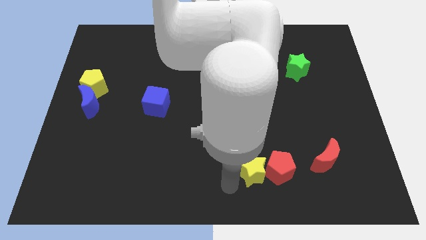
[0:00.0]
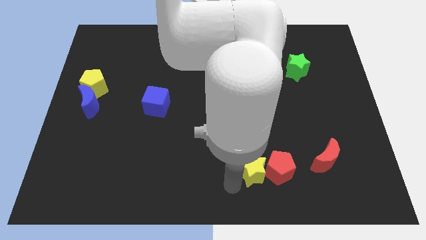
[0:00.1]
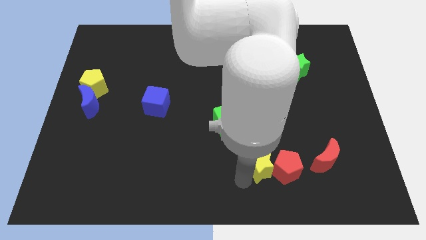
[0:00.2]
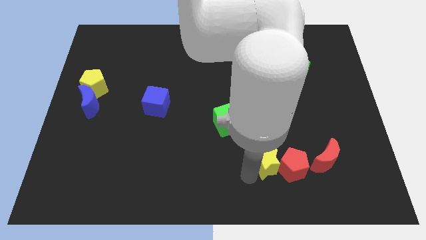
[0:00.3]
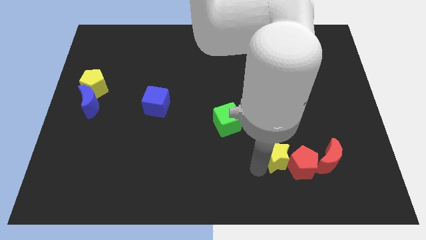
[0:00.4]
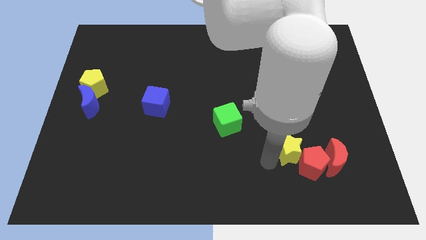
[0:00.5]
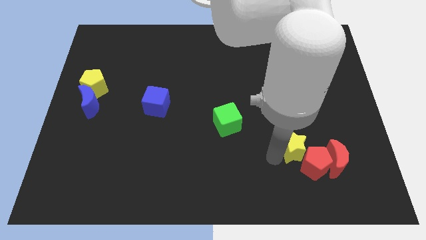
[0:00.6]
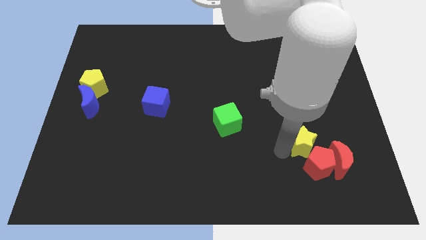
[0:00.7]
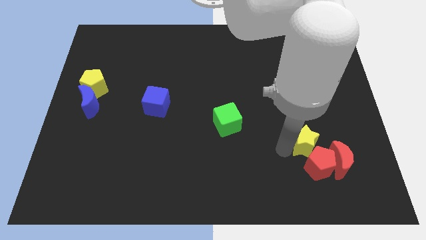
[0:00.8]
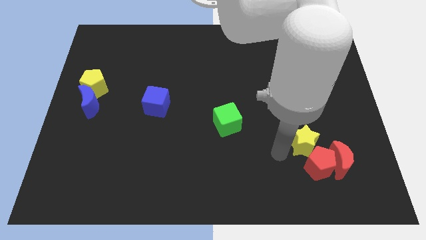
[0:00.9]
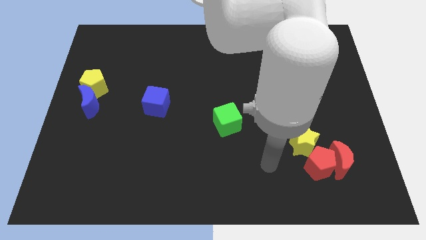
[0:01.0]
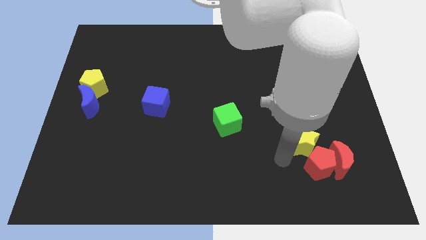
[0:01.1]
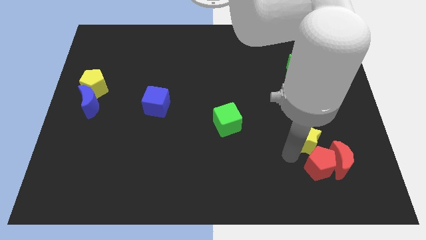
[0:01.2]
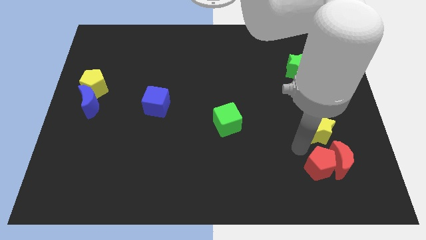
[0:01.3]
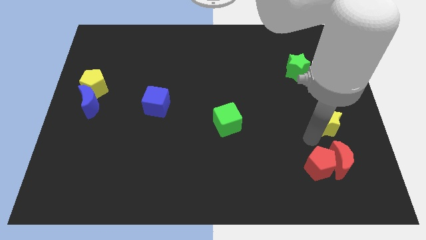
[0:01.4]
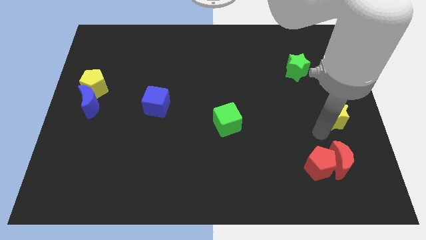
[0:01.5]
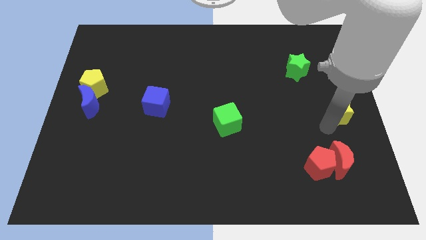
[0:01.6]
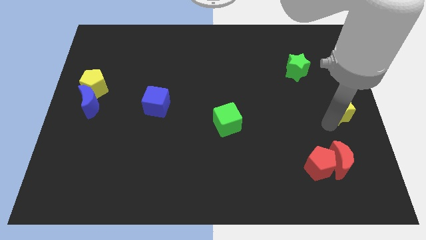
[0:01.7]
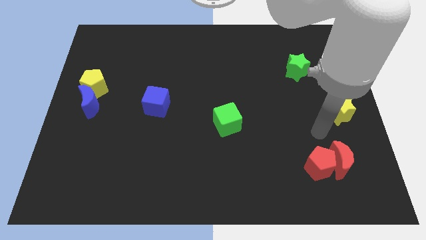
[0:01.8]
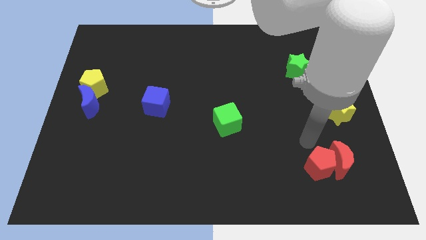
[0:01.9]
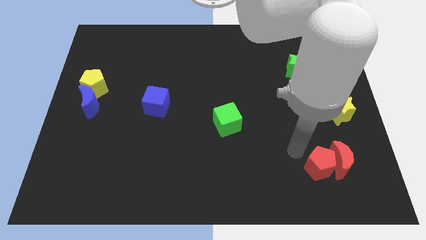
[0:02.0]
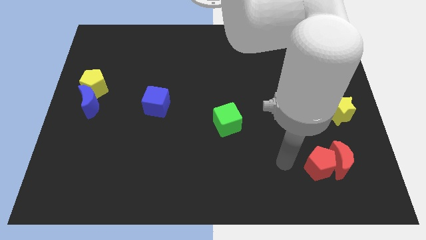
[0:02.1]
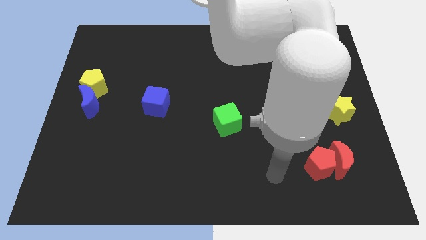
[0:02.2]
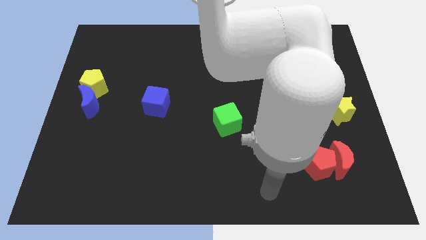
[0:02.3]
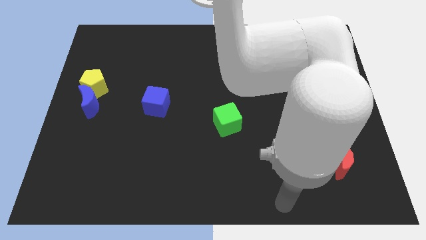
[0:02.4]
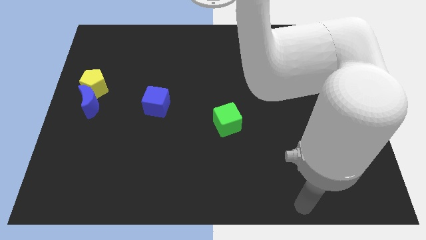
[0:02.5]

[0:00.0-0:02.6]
move the yellow star to the center right

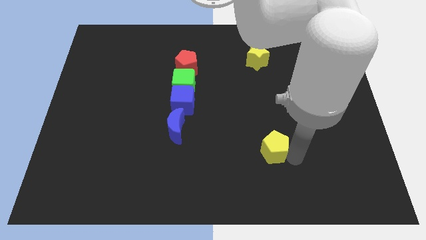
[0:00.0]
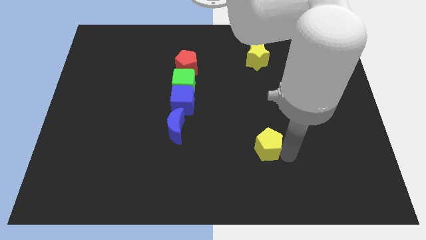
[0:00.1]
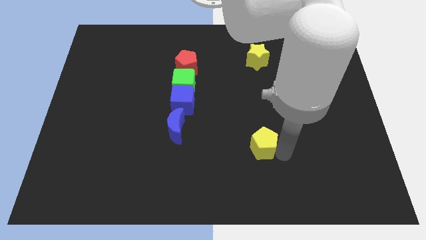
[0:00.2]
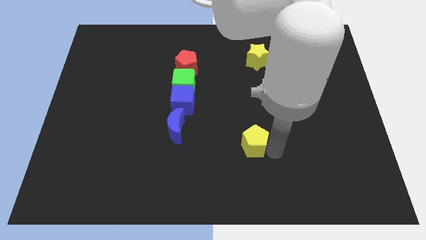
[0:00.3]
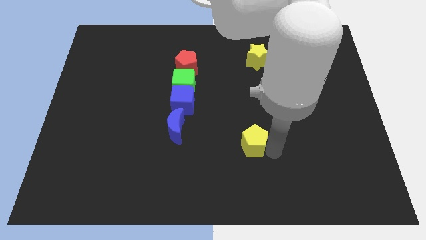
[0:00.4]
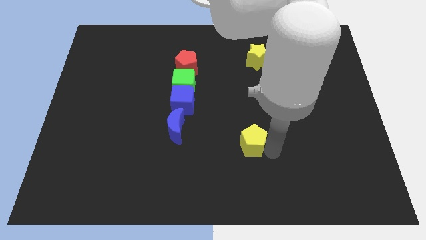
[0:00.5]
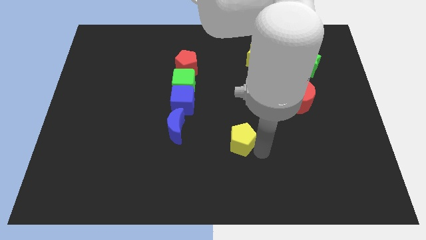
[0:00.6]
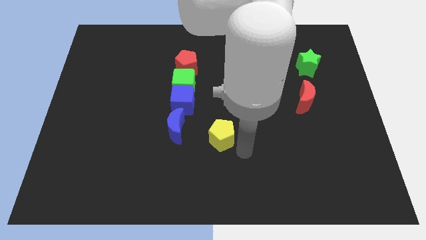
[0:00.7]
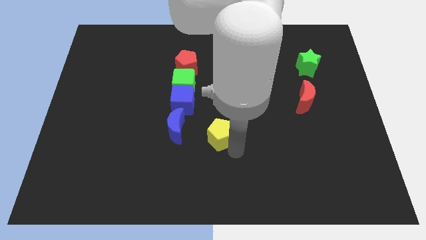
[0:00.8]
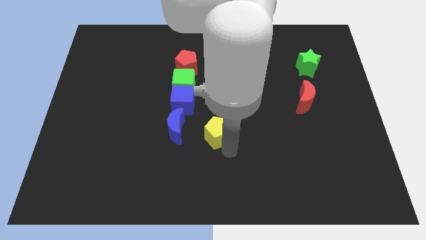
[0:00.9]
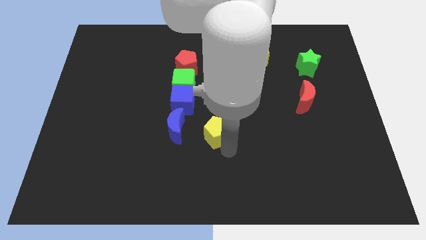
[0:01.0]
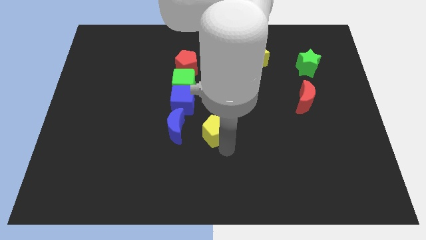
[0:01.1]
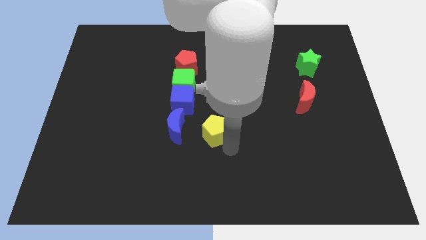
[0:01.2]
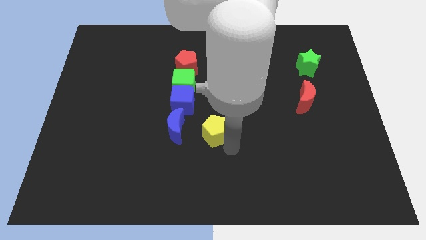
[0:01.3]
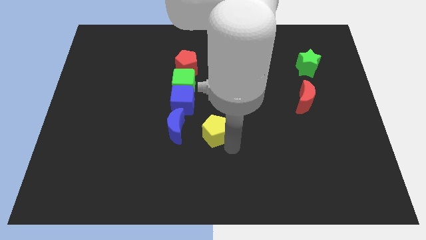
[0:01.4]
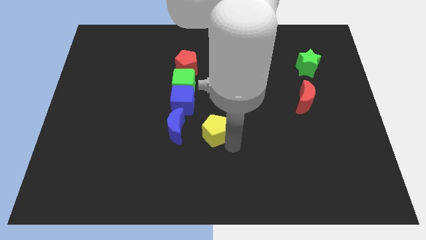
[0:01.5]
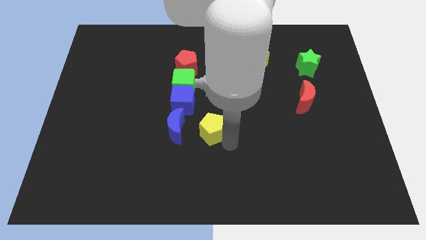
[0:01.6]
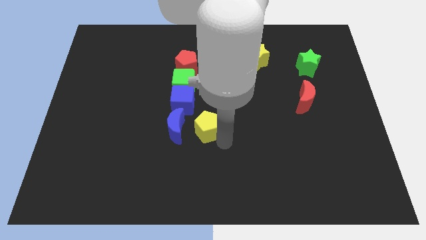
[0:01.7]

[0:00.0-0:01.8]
move the yellow pentagon to the right of the blue moon

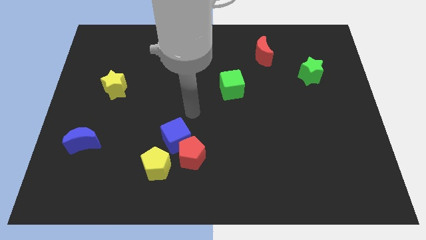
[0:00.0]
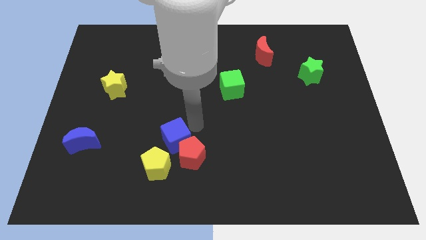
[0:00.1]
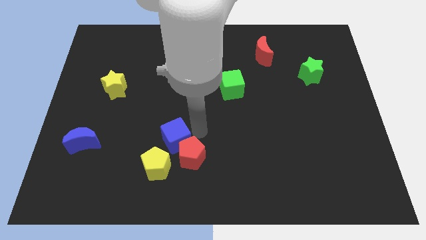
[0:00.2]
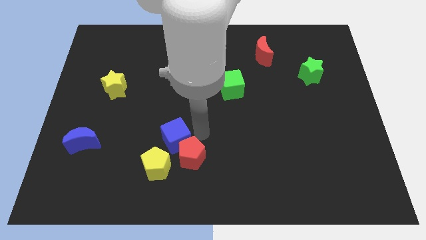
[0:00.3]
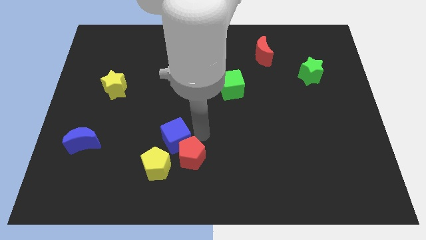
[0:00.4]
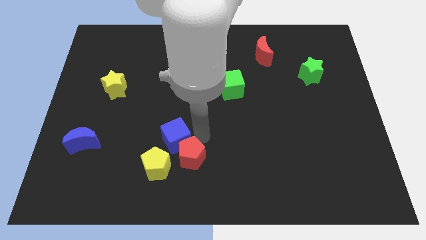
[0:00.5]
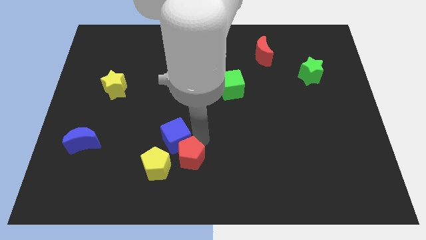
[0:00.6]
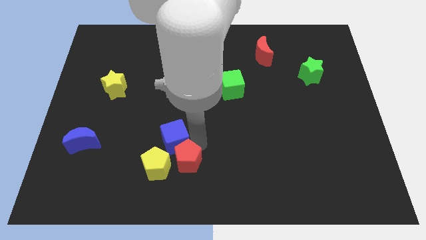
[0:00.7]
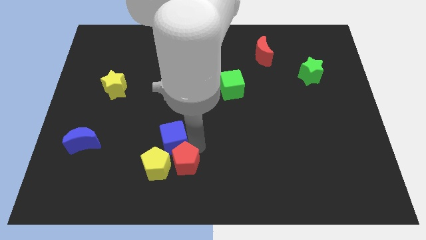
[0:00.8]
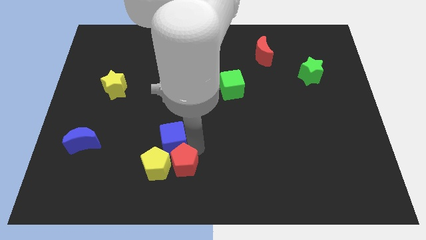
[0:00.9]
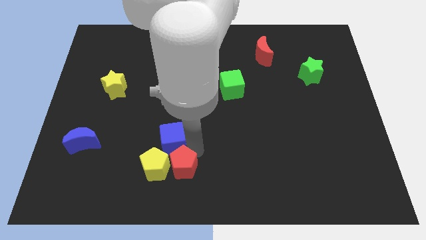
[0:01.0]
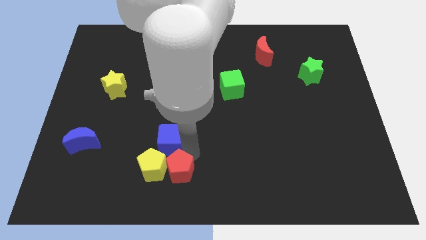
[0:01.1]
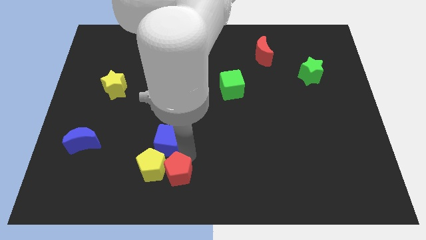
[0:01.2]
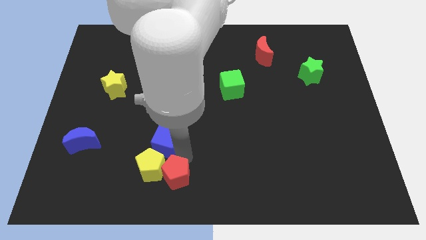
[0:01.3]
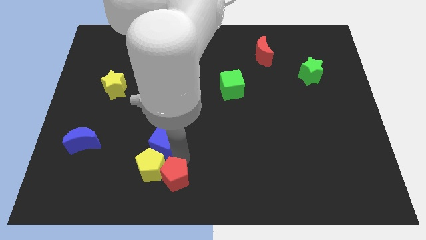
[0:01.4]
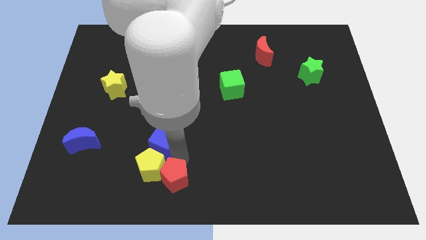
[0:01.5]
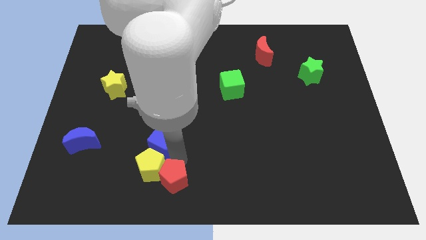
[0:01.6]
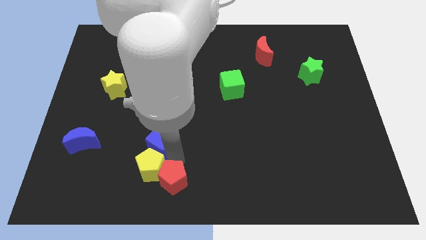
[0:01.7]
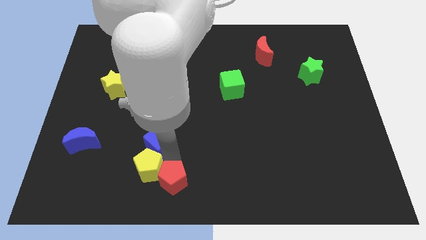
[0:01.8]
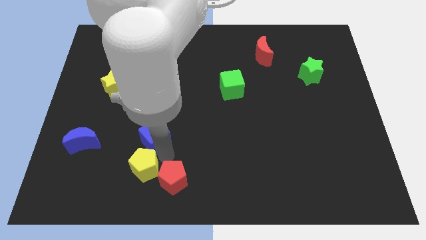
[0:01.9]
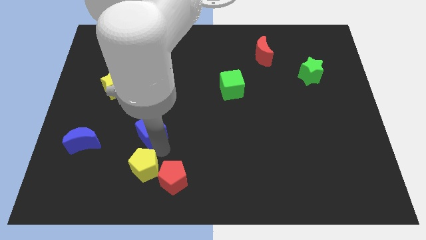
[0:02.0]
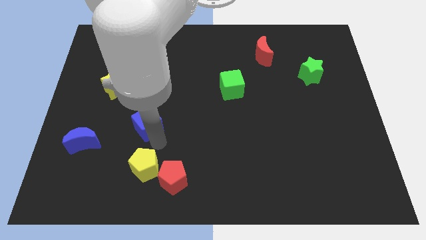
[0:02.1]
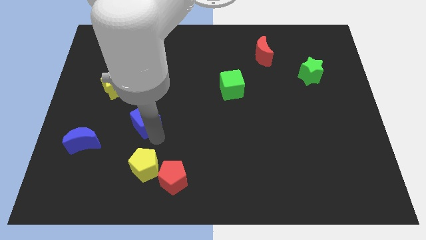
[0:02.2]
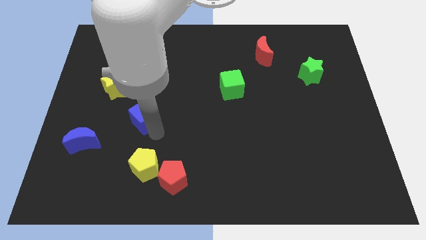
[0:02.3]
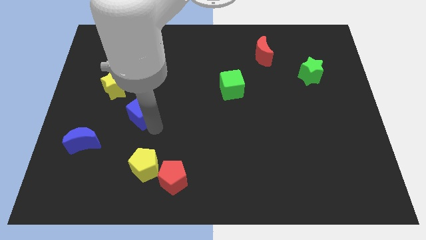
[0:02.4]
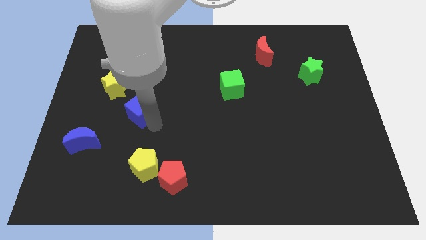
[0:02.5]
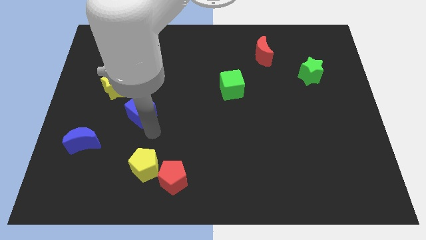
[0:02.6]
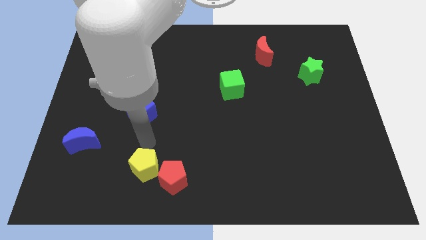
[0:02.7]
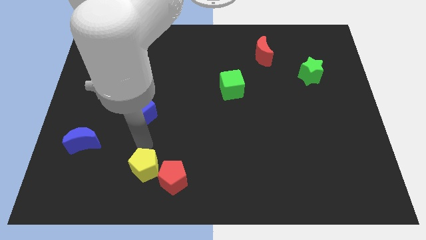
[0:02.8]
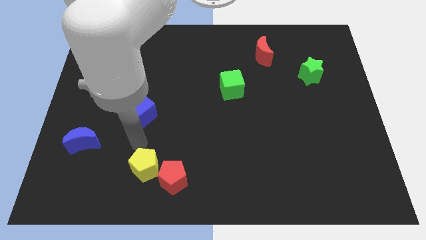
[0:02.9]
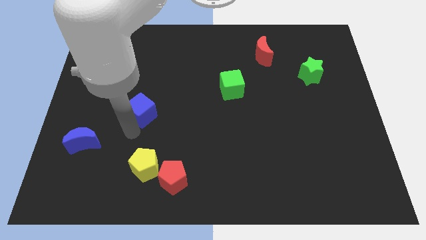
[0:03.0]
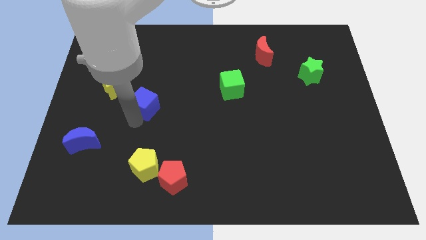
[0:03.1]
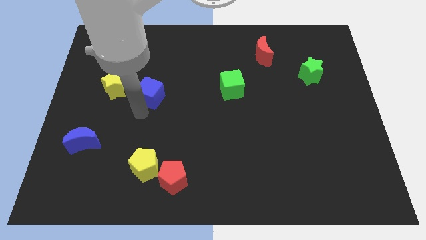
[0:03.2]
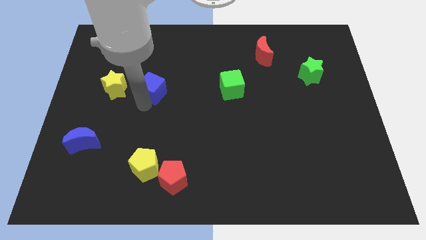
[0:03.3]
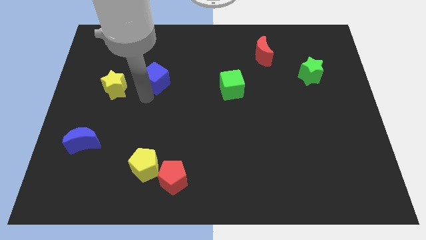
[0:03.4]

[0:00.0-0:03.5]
place the blue cube in between the yellow star and green cube

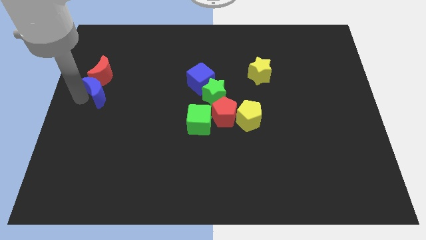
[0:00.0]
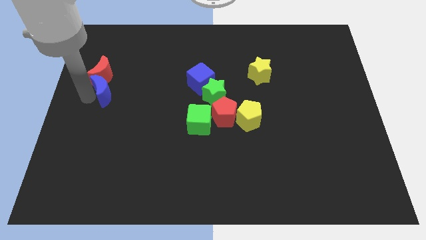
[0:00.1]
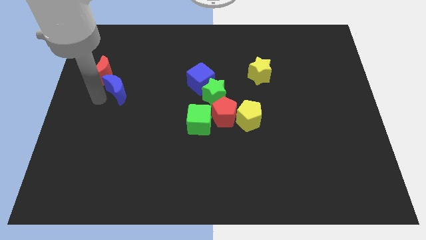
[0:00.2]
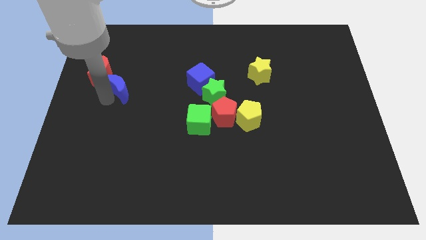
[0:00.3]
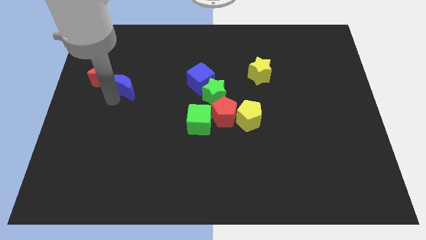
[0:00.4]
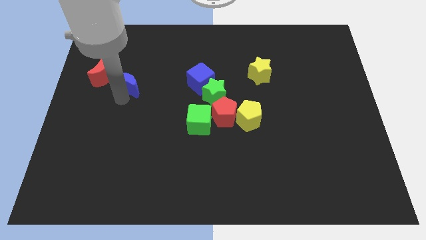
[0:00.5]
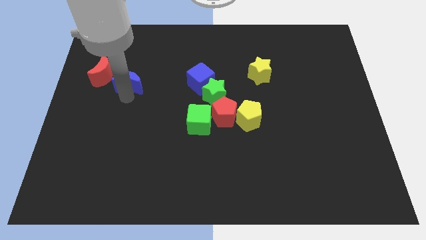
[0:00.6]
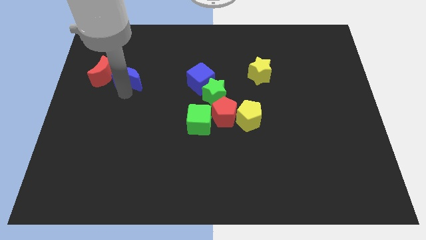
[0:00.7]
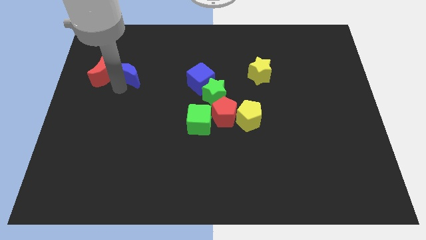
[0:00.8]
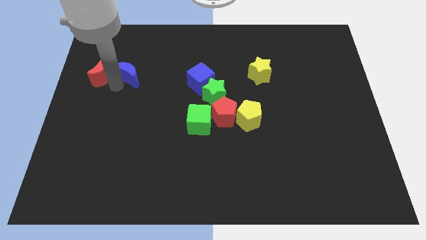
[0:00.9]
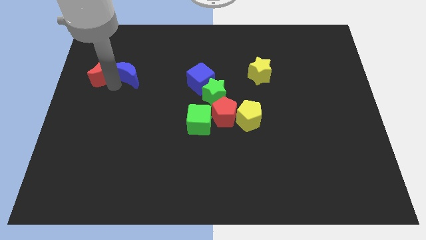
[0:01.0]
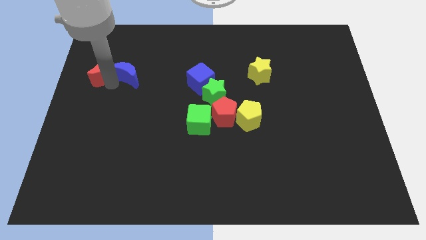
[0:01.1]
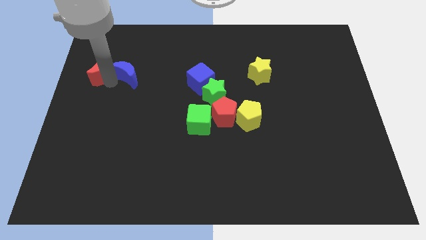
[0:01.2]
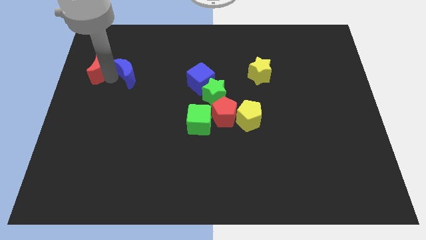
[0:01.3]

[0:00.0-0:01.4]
move the blue crescent to the right side of the red crescent
